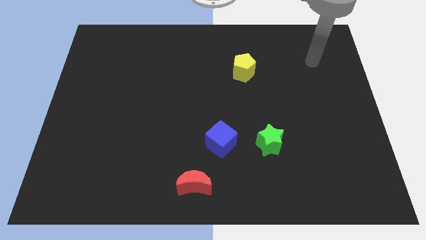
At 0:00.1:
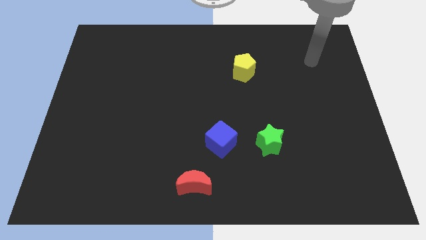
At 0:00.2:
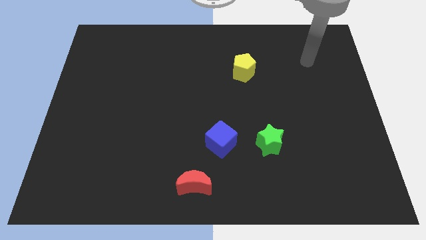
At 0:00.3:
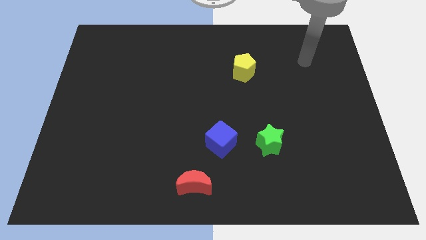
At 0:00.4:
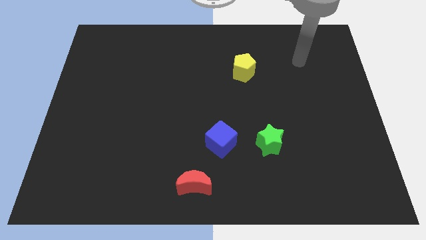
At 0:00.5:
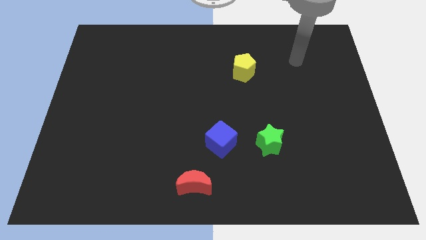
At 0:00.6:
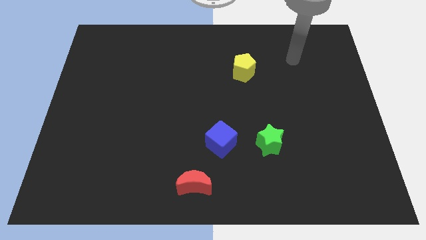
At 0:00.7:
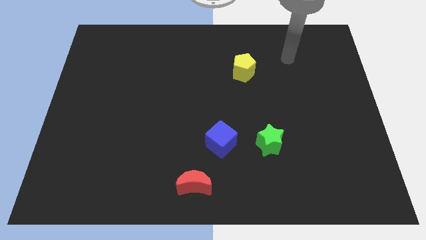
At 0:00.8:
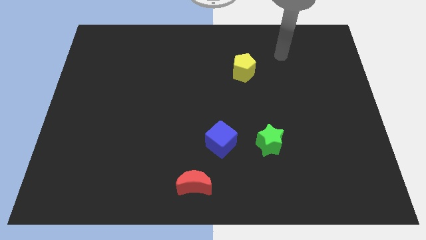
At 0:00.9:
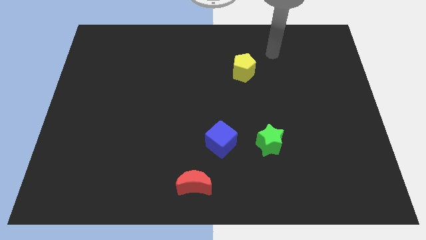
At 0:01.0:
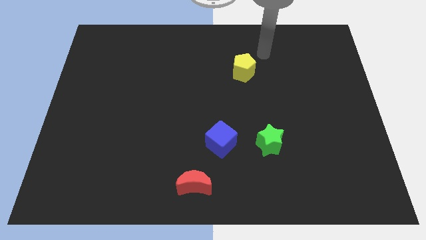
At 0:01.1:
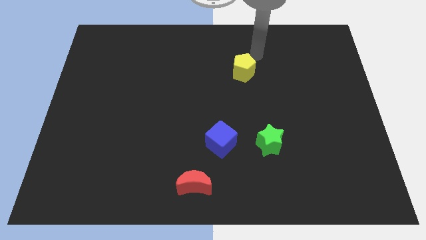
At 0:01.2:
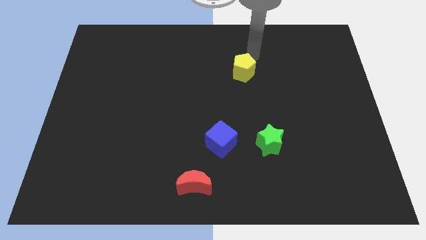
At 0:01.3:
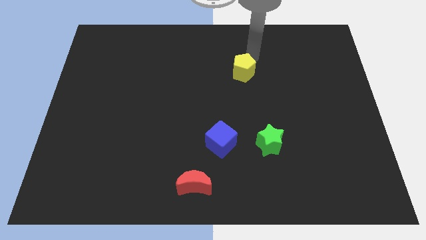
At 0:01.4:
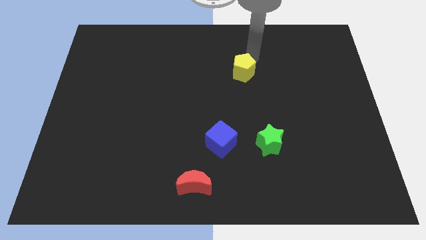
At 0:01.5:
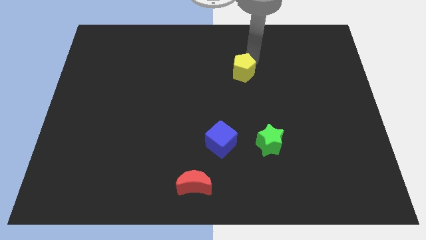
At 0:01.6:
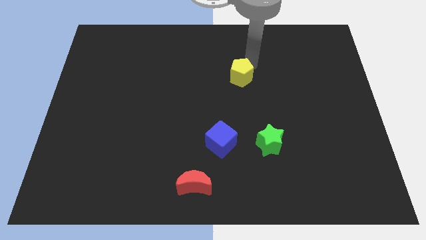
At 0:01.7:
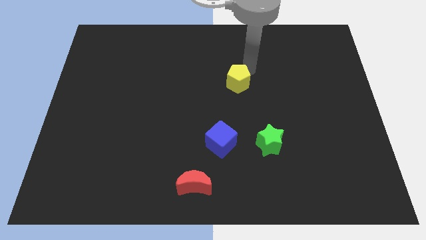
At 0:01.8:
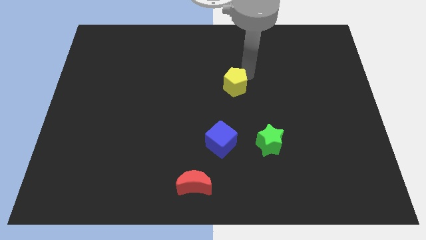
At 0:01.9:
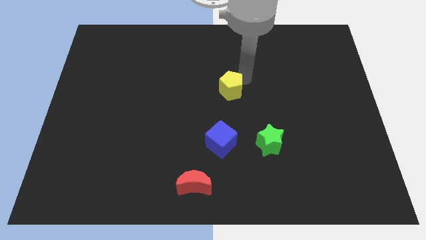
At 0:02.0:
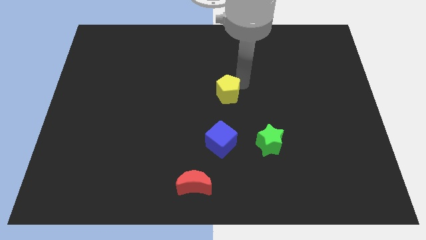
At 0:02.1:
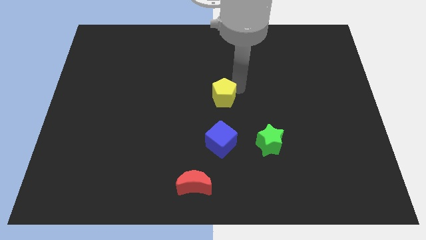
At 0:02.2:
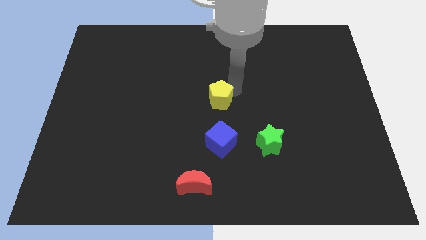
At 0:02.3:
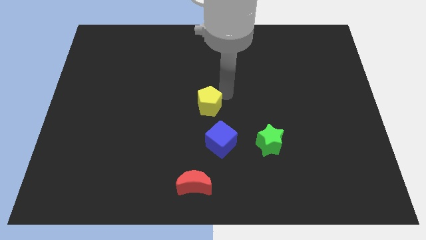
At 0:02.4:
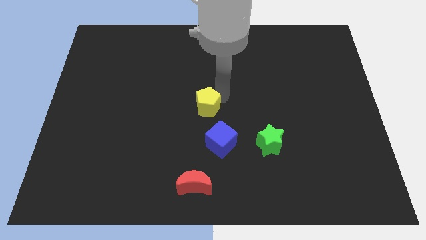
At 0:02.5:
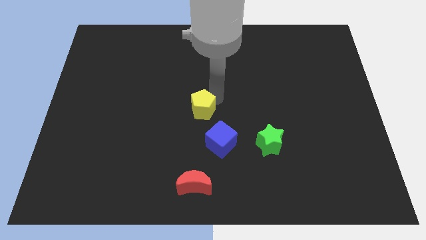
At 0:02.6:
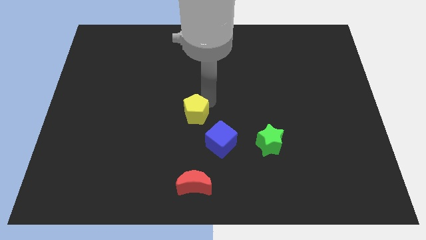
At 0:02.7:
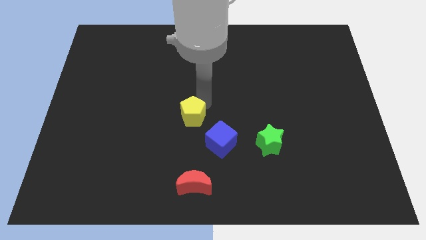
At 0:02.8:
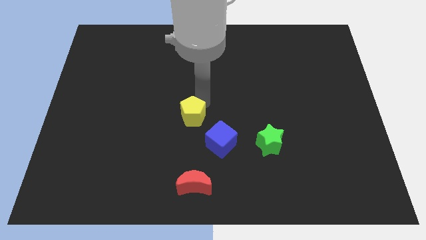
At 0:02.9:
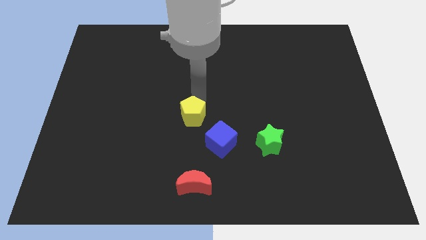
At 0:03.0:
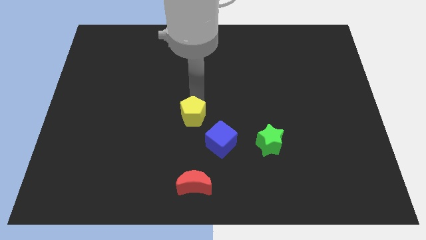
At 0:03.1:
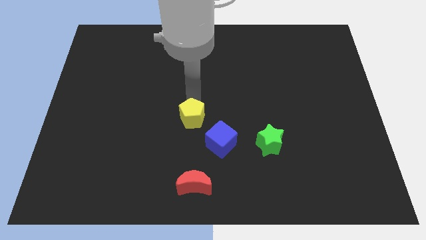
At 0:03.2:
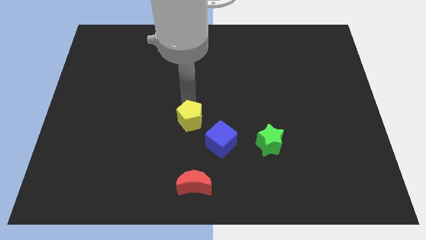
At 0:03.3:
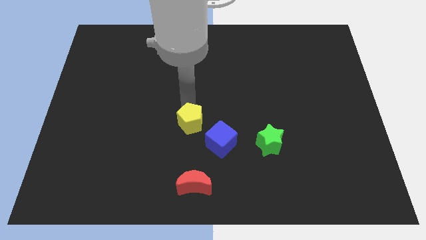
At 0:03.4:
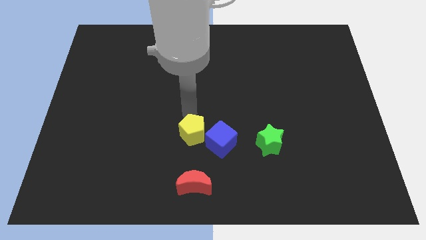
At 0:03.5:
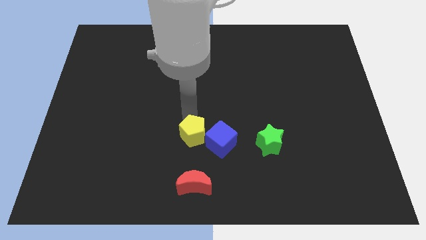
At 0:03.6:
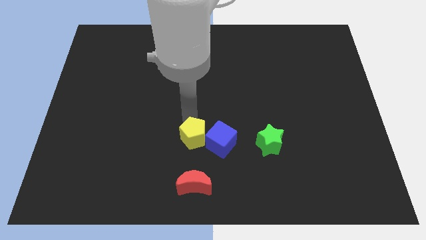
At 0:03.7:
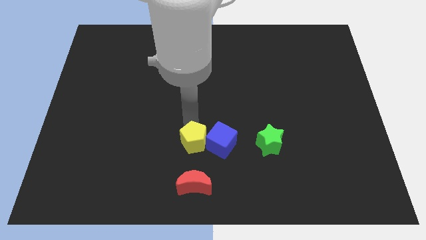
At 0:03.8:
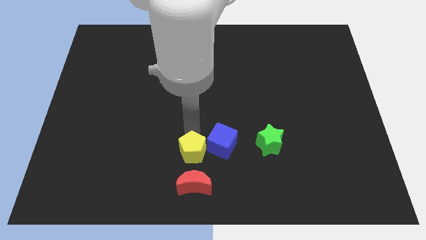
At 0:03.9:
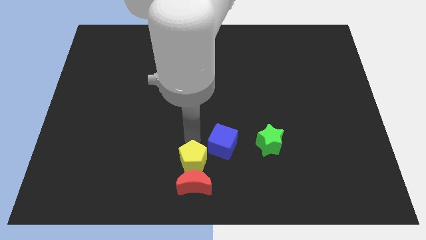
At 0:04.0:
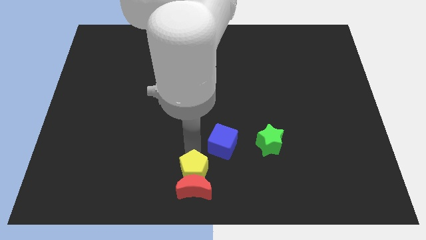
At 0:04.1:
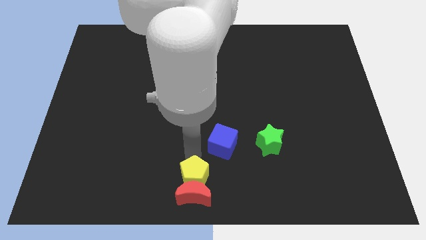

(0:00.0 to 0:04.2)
slide the pentagon next to the red block

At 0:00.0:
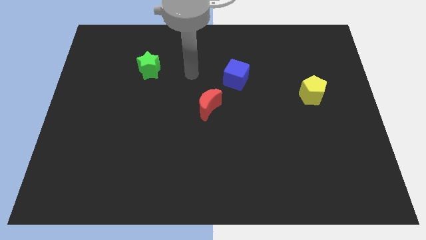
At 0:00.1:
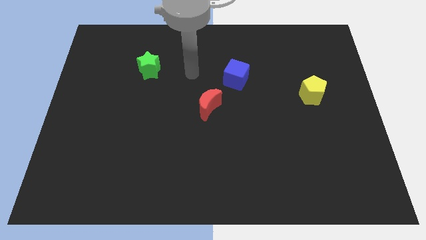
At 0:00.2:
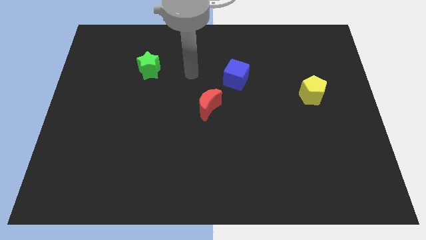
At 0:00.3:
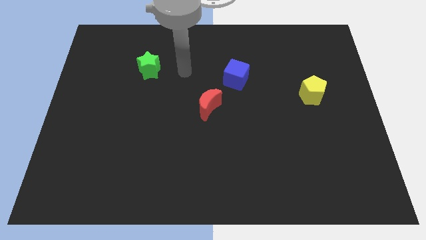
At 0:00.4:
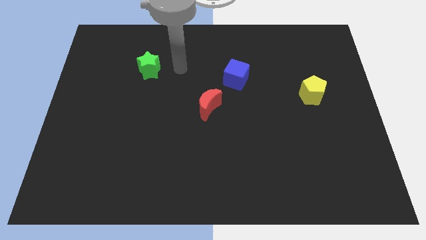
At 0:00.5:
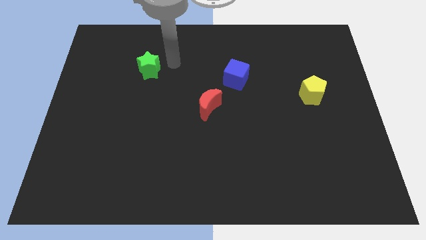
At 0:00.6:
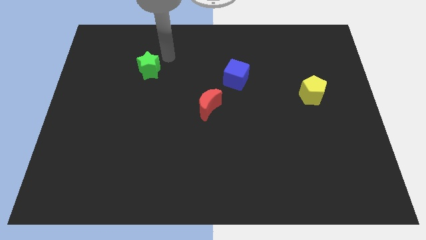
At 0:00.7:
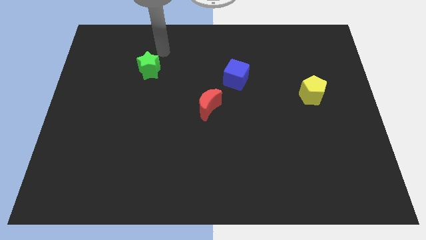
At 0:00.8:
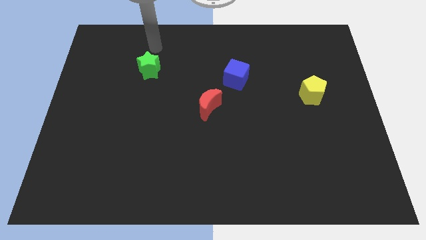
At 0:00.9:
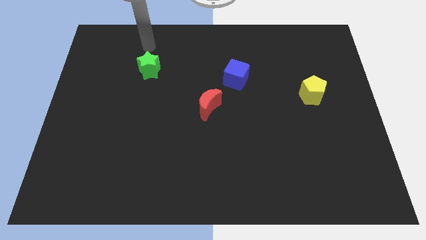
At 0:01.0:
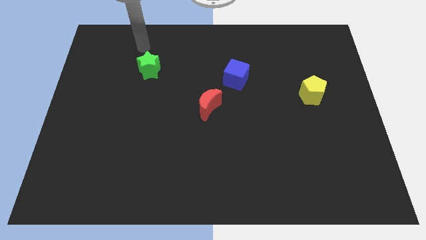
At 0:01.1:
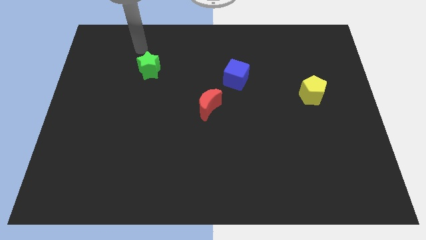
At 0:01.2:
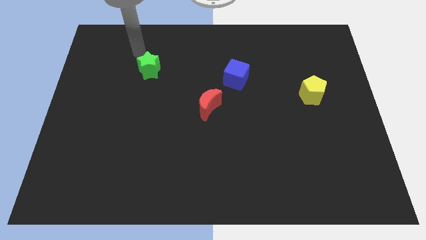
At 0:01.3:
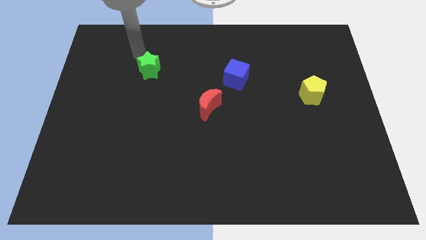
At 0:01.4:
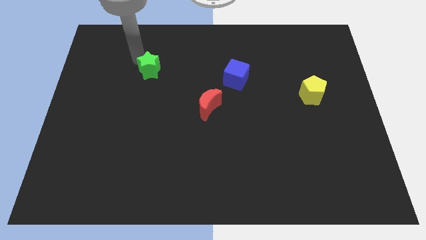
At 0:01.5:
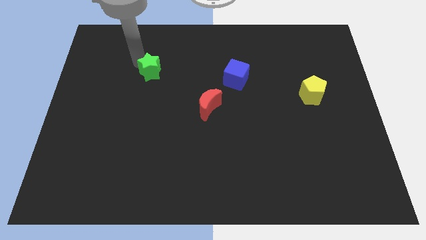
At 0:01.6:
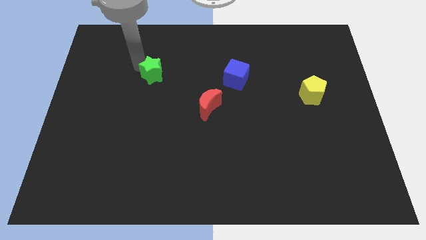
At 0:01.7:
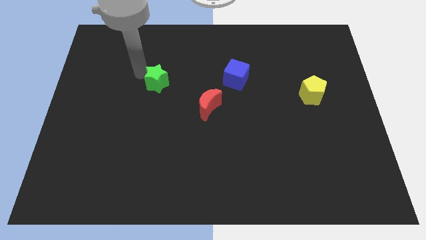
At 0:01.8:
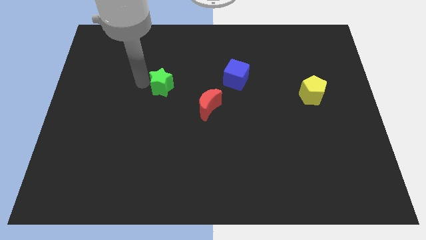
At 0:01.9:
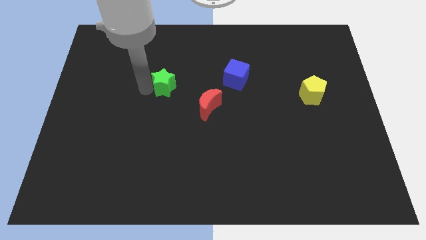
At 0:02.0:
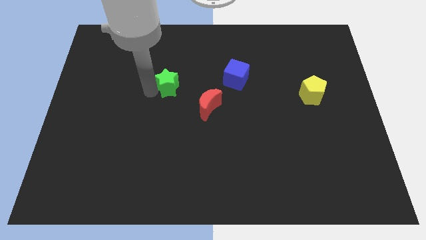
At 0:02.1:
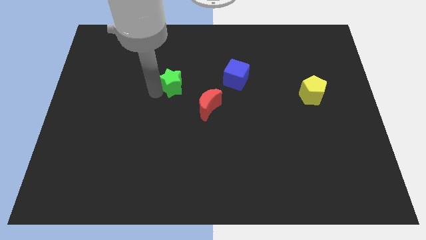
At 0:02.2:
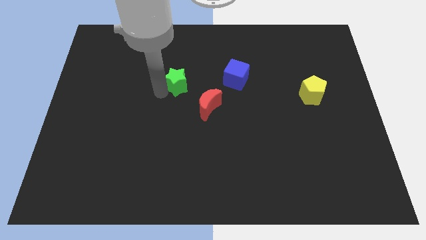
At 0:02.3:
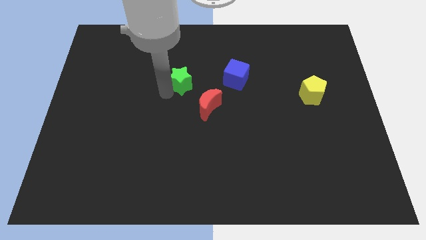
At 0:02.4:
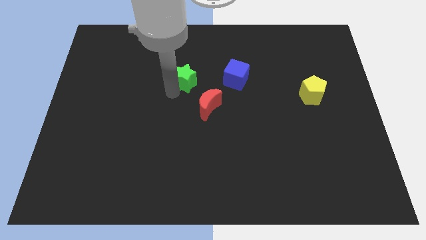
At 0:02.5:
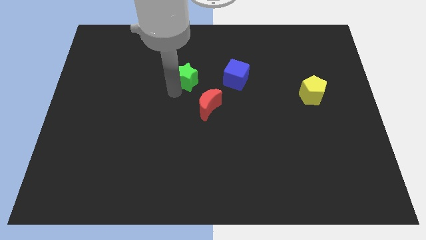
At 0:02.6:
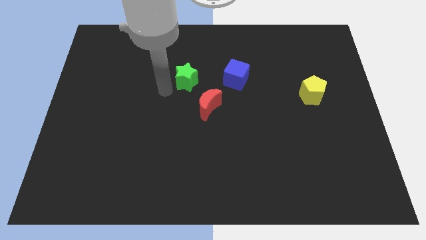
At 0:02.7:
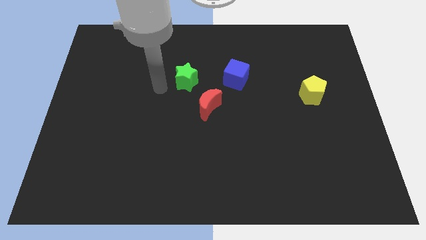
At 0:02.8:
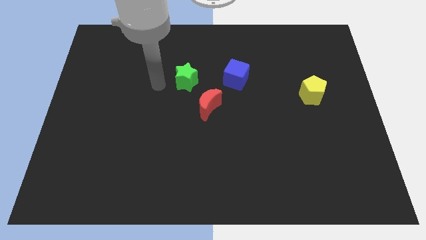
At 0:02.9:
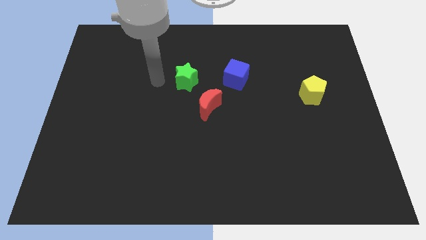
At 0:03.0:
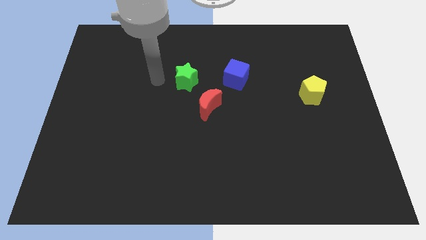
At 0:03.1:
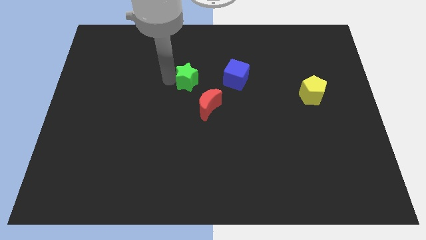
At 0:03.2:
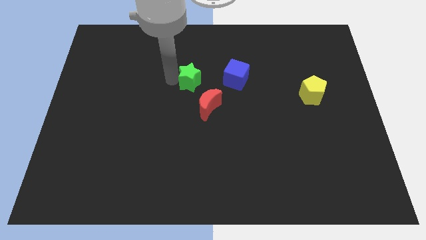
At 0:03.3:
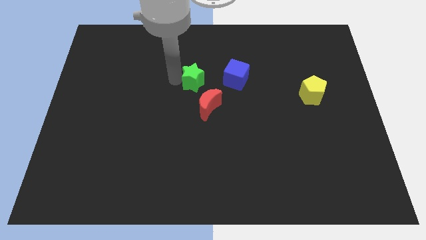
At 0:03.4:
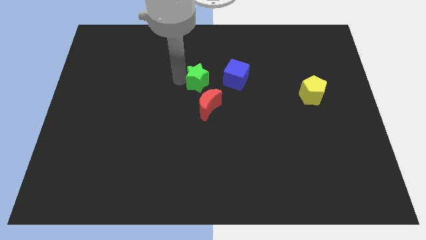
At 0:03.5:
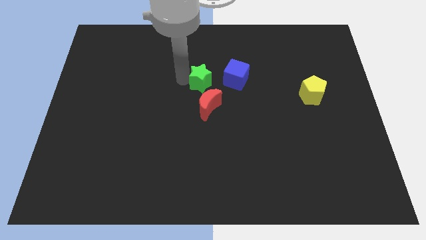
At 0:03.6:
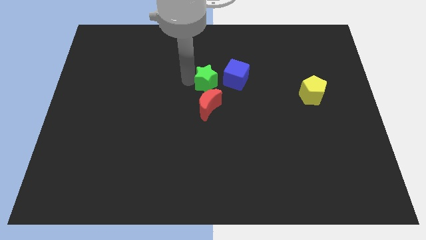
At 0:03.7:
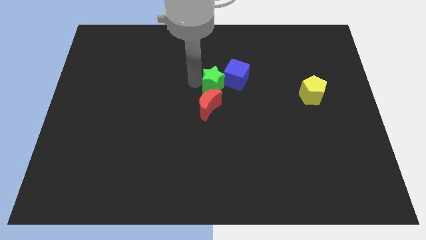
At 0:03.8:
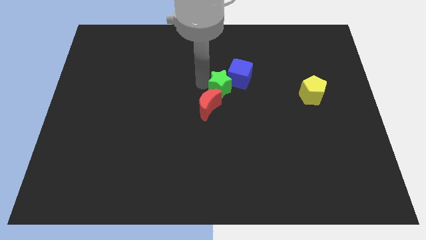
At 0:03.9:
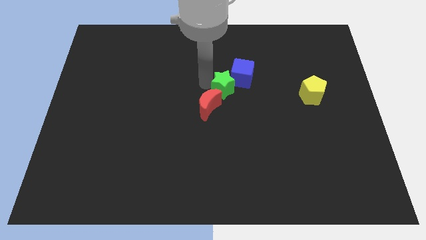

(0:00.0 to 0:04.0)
move the green block towards the blue block
